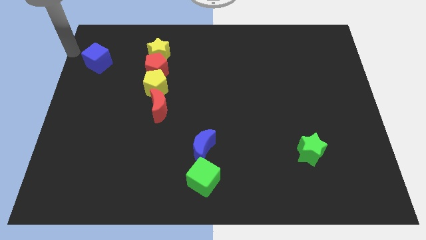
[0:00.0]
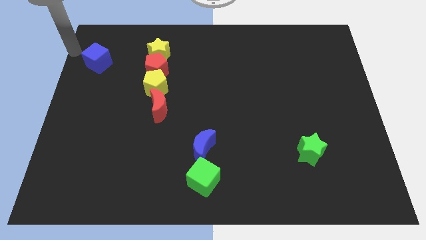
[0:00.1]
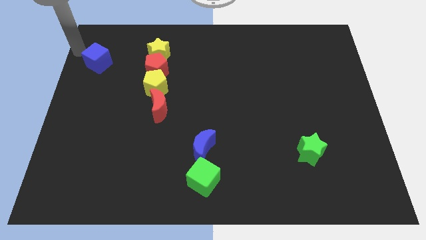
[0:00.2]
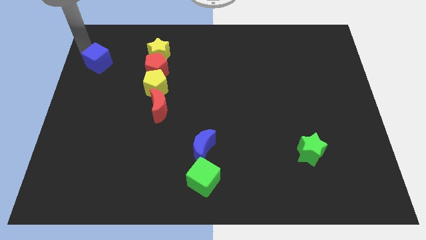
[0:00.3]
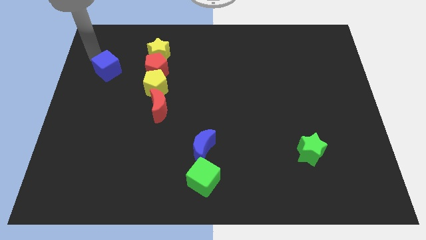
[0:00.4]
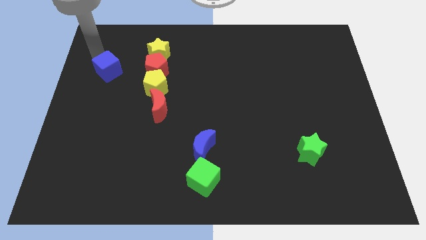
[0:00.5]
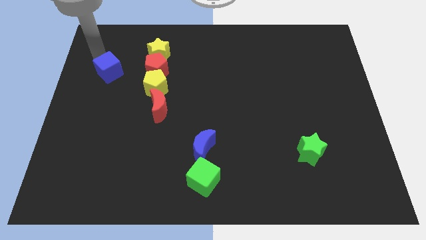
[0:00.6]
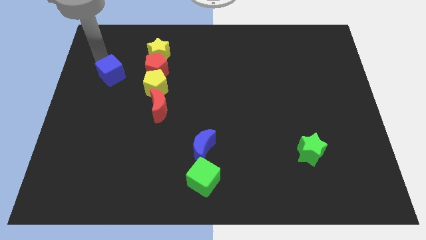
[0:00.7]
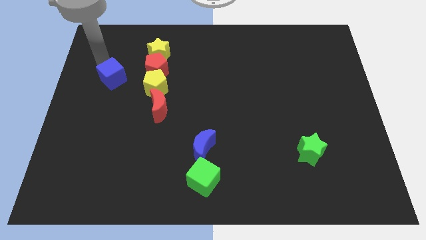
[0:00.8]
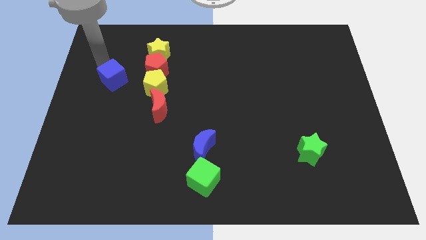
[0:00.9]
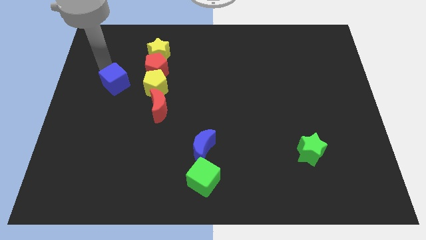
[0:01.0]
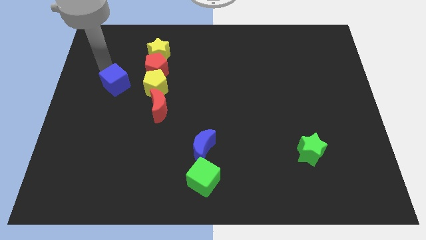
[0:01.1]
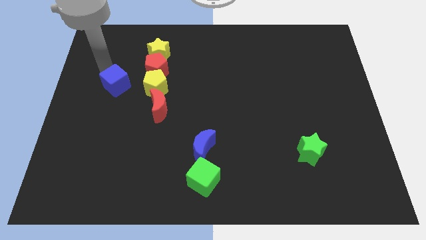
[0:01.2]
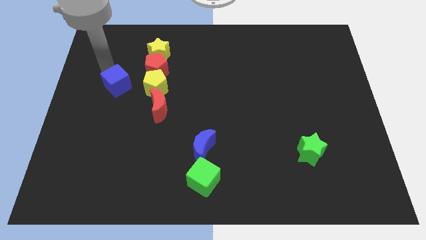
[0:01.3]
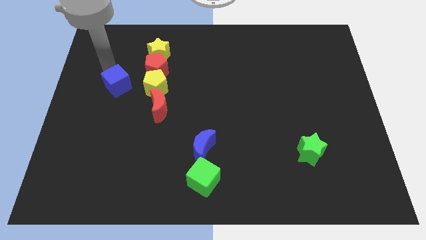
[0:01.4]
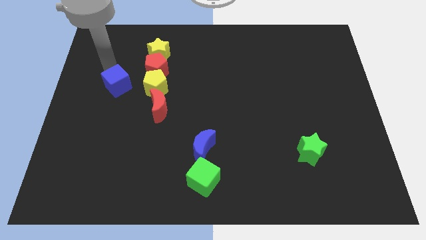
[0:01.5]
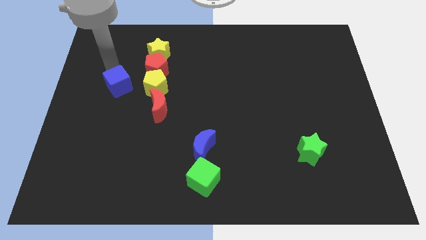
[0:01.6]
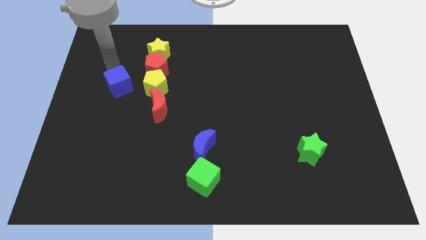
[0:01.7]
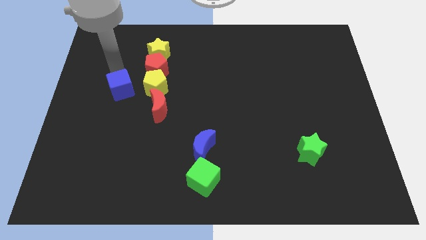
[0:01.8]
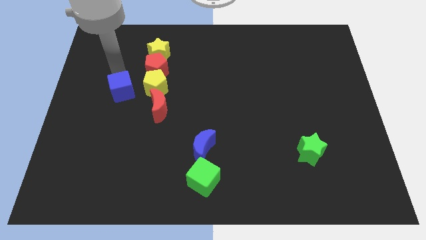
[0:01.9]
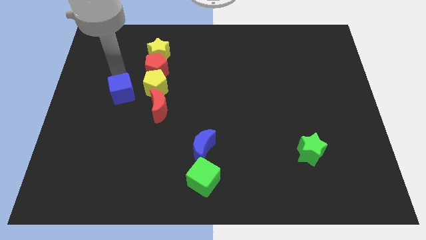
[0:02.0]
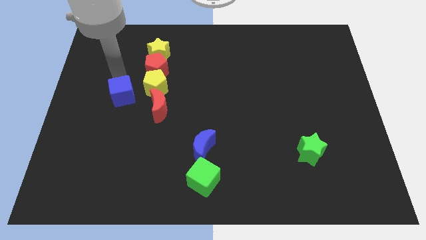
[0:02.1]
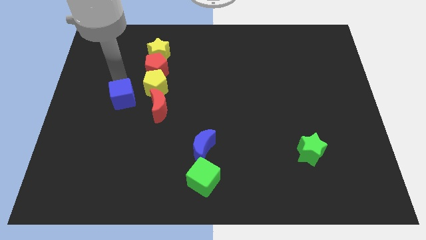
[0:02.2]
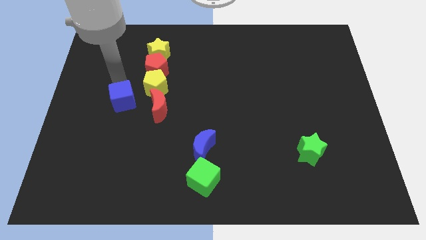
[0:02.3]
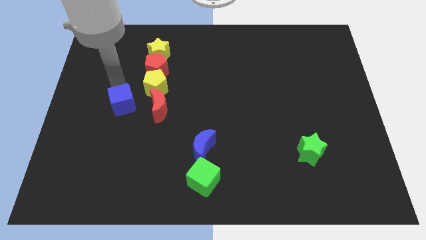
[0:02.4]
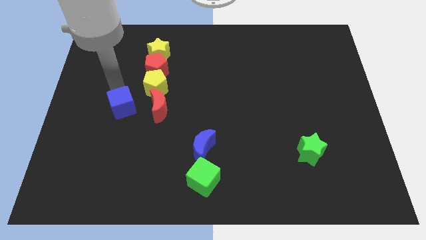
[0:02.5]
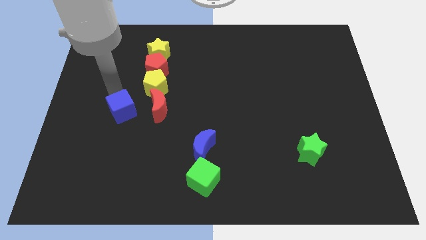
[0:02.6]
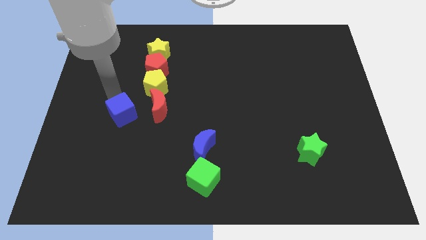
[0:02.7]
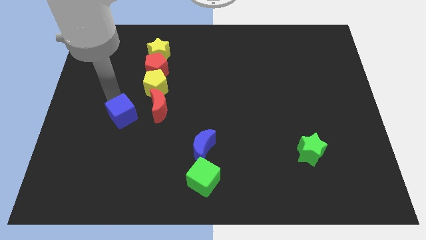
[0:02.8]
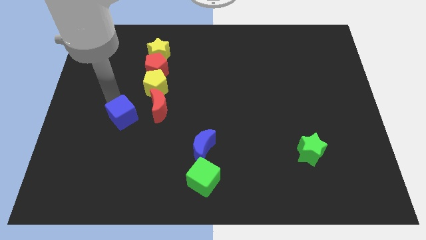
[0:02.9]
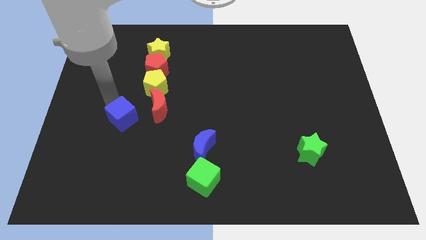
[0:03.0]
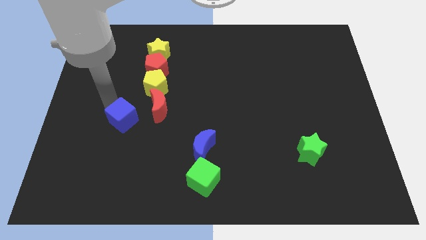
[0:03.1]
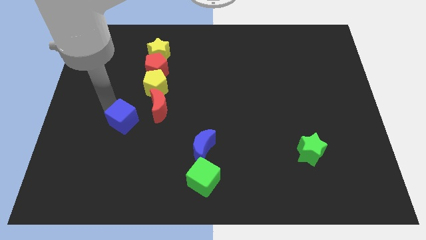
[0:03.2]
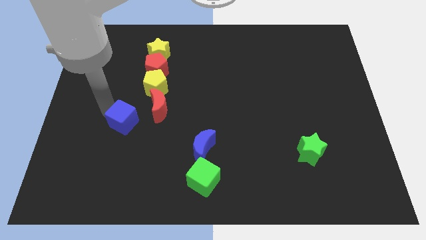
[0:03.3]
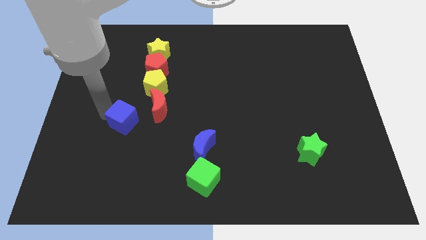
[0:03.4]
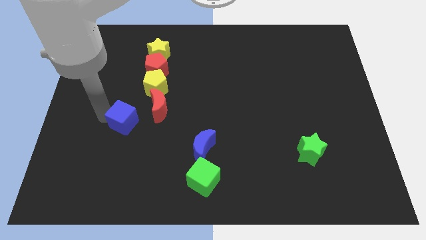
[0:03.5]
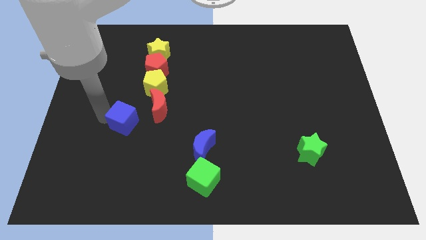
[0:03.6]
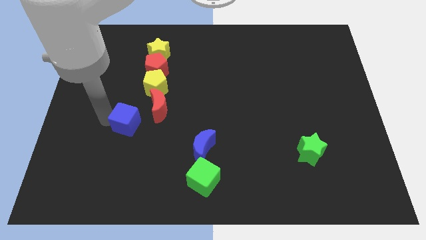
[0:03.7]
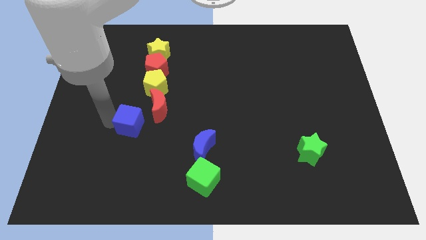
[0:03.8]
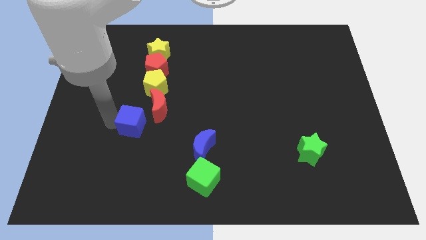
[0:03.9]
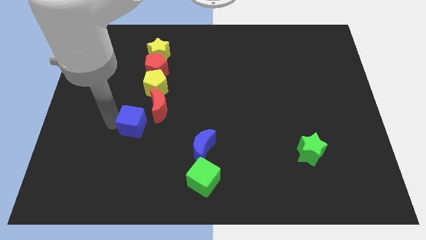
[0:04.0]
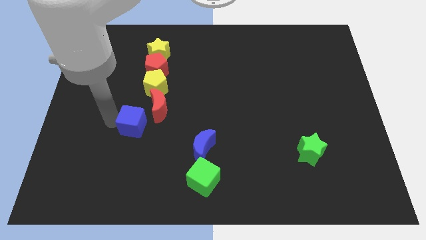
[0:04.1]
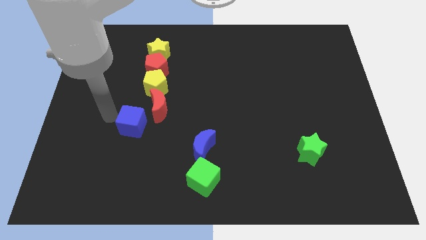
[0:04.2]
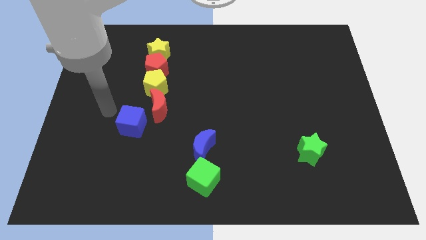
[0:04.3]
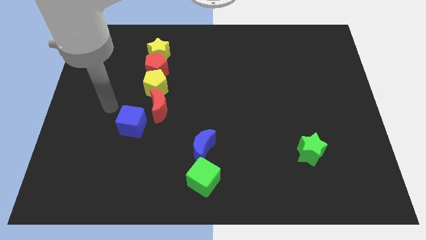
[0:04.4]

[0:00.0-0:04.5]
move the blue cube towards the red crescent

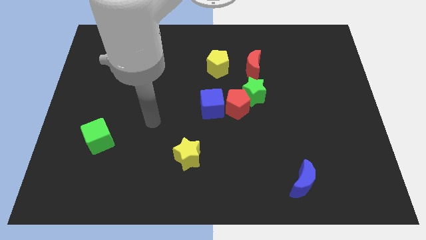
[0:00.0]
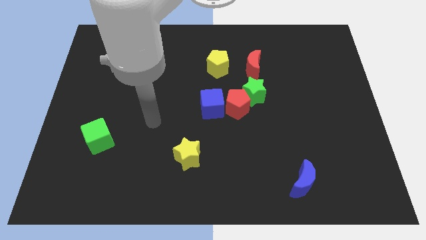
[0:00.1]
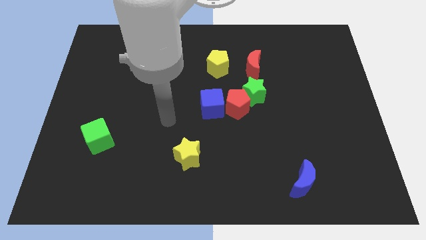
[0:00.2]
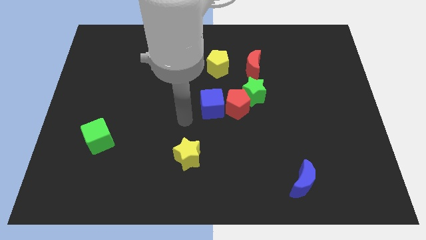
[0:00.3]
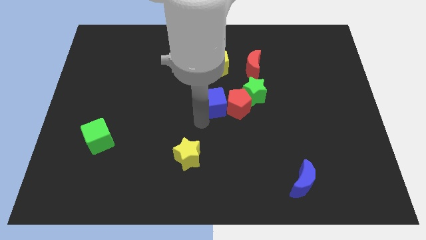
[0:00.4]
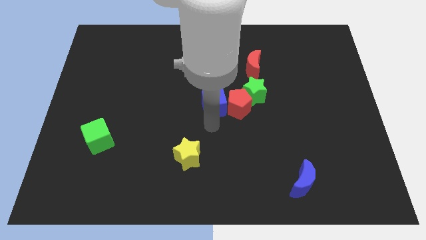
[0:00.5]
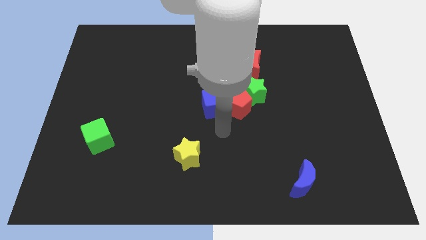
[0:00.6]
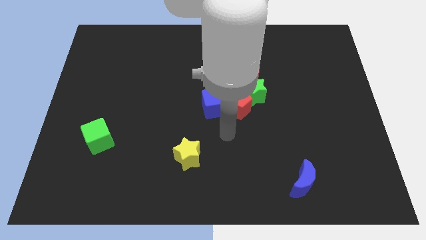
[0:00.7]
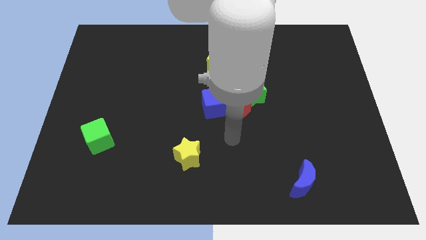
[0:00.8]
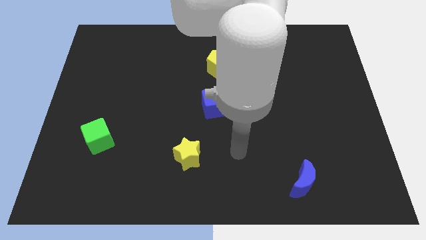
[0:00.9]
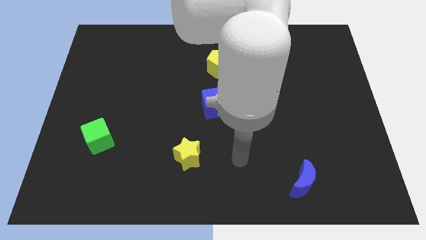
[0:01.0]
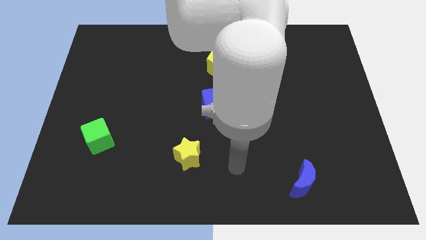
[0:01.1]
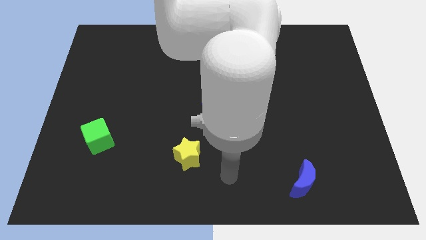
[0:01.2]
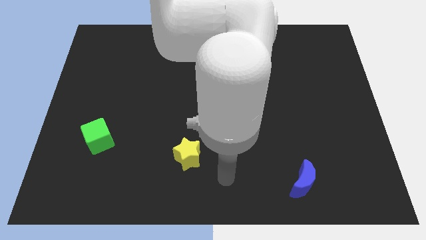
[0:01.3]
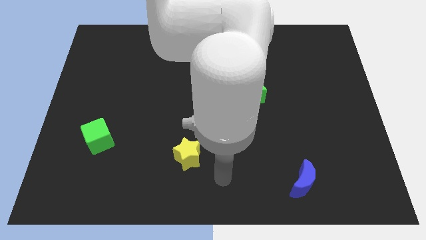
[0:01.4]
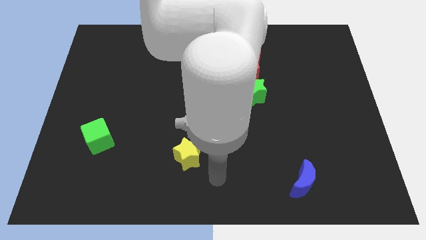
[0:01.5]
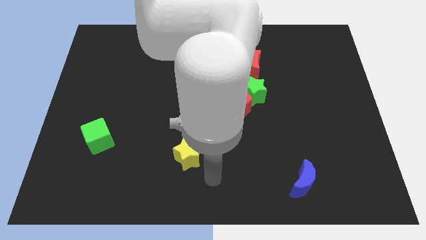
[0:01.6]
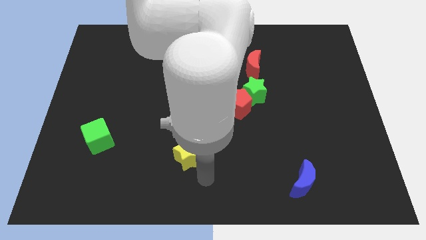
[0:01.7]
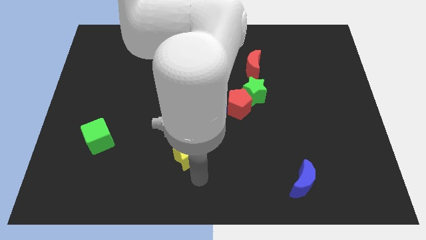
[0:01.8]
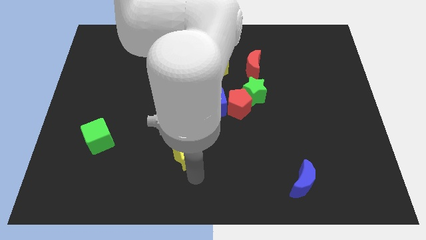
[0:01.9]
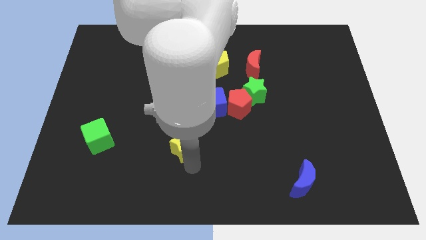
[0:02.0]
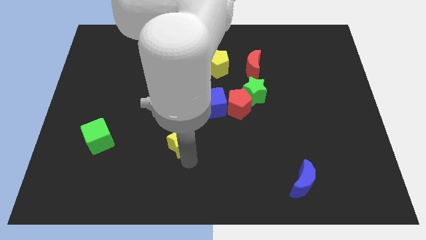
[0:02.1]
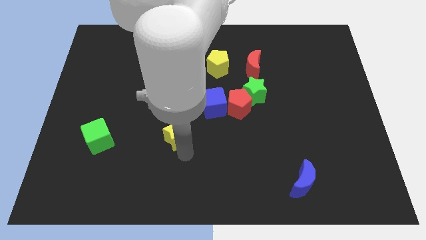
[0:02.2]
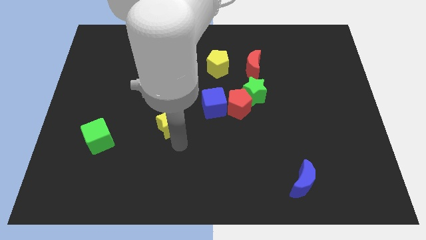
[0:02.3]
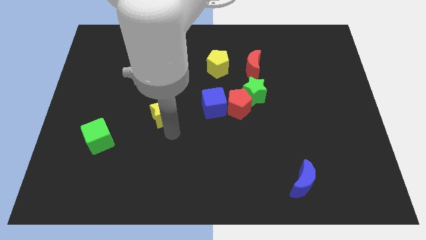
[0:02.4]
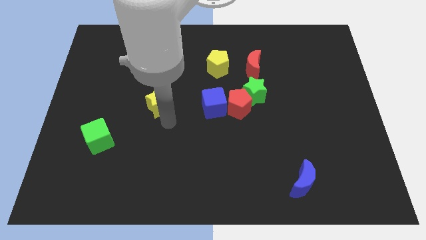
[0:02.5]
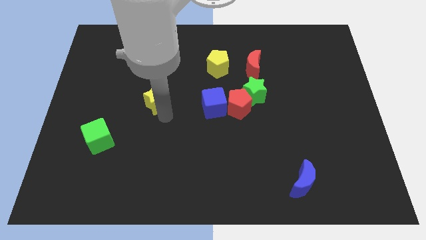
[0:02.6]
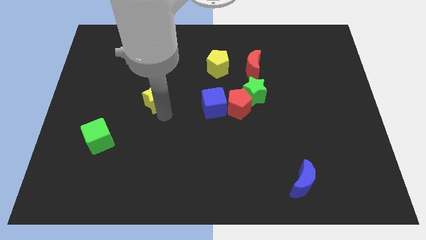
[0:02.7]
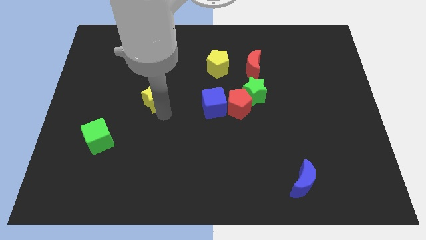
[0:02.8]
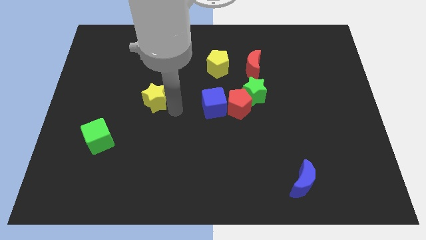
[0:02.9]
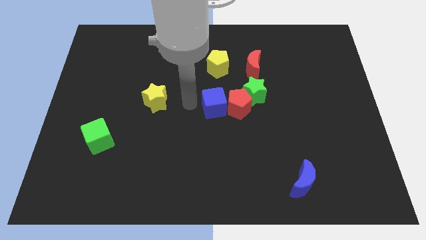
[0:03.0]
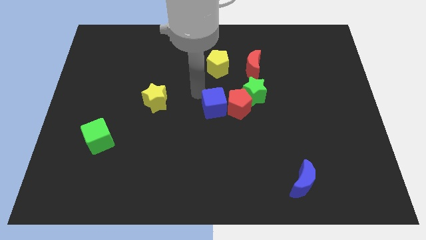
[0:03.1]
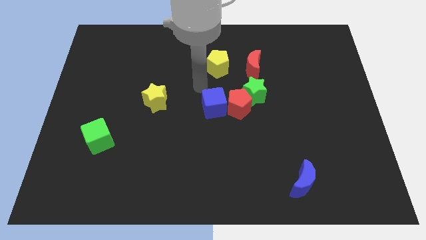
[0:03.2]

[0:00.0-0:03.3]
place the yellow star left to the blue cube

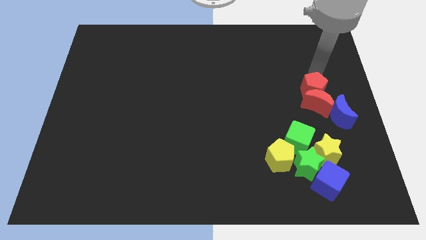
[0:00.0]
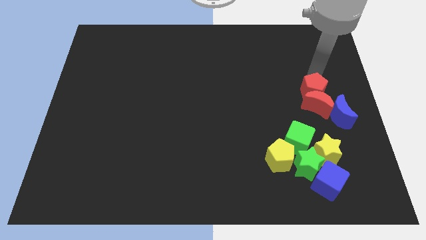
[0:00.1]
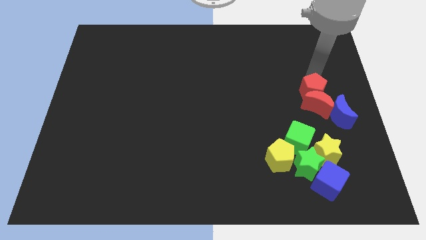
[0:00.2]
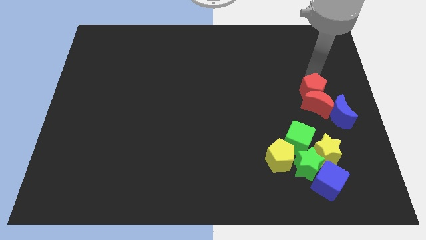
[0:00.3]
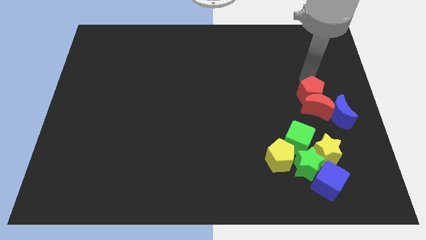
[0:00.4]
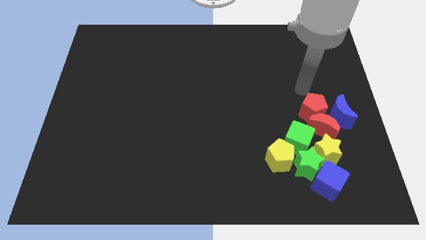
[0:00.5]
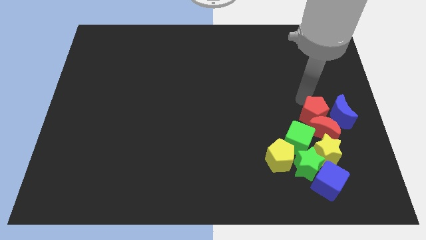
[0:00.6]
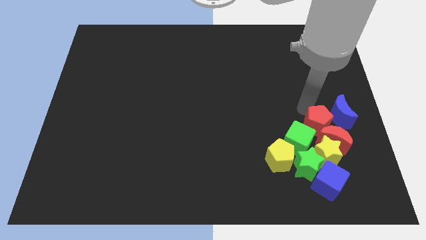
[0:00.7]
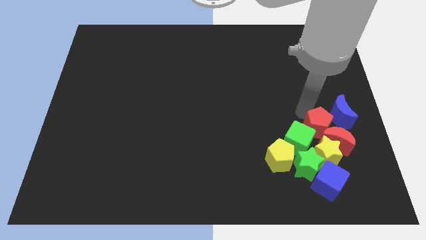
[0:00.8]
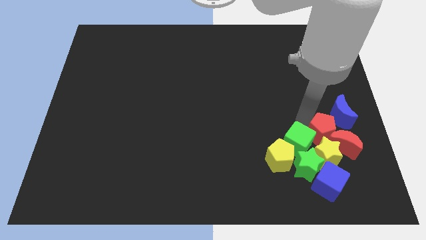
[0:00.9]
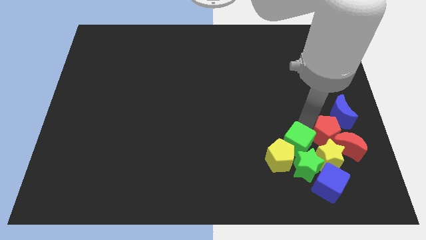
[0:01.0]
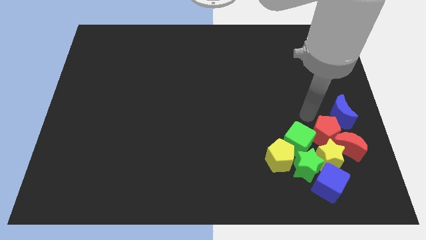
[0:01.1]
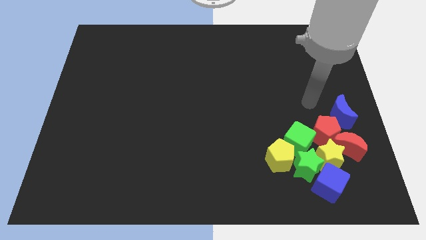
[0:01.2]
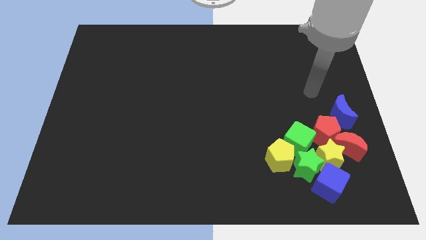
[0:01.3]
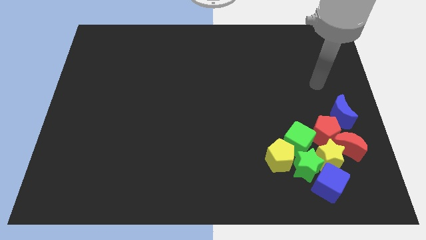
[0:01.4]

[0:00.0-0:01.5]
move the red blocks into the yellow star
